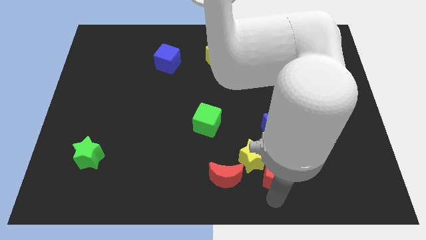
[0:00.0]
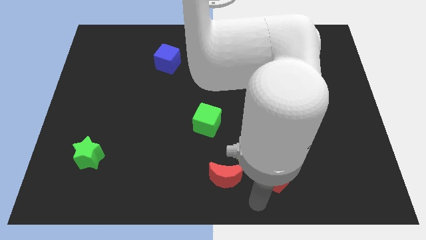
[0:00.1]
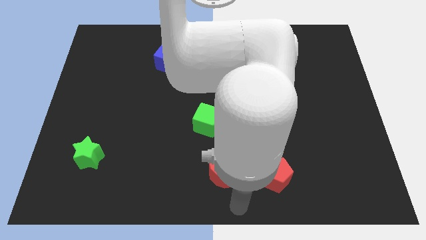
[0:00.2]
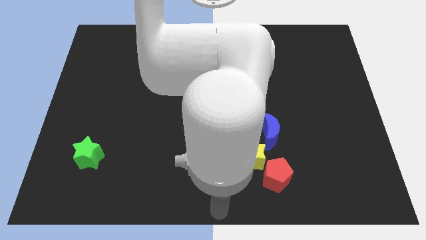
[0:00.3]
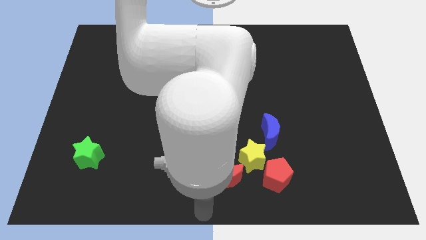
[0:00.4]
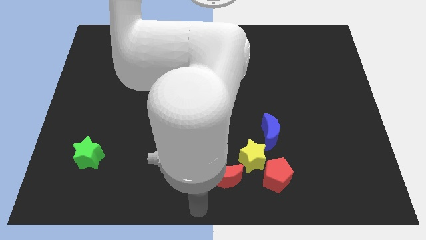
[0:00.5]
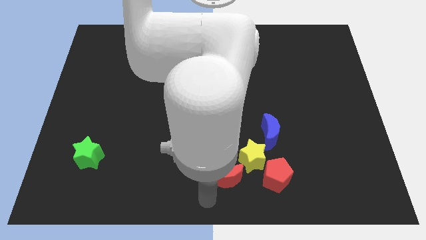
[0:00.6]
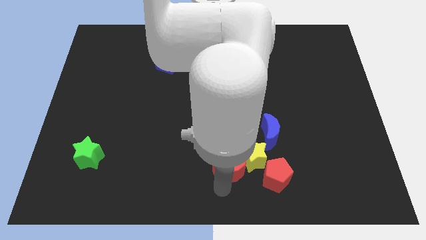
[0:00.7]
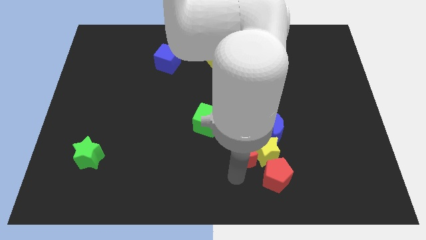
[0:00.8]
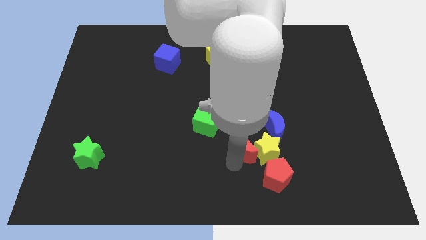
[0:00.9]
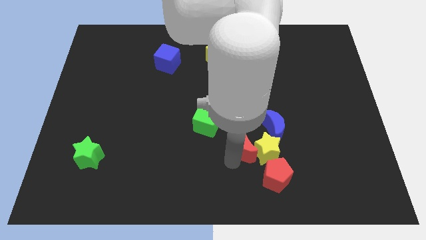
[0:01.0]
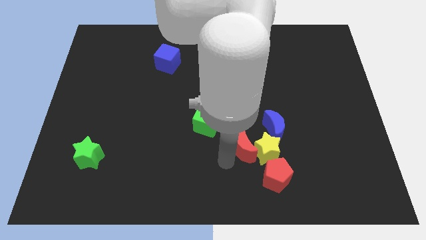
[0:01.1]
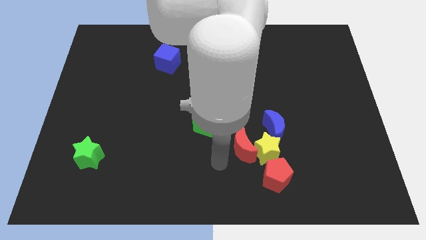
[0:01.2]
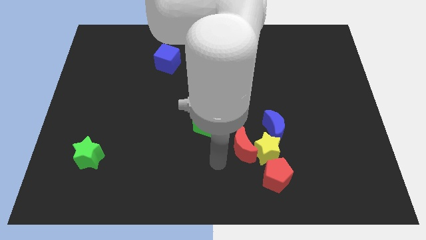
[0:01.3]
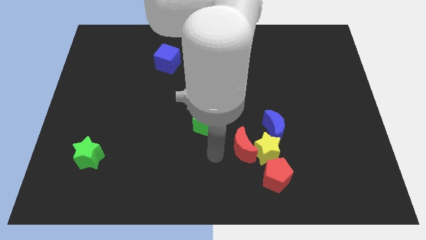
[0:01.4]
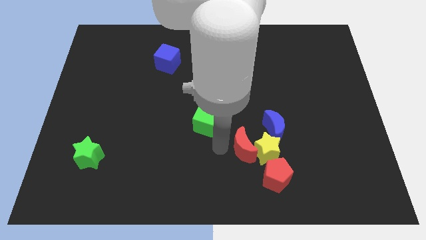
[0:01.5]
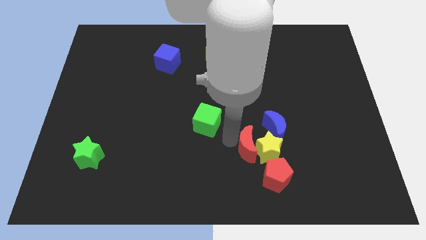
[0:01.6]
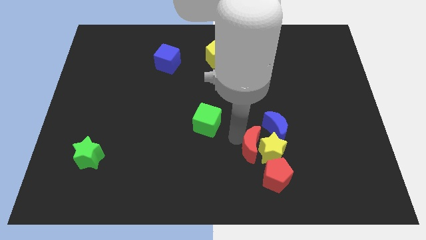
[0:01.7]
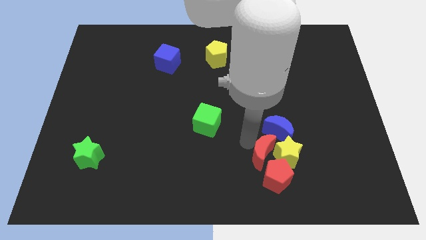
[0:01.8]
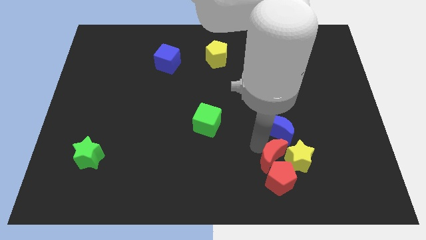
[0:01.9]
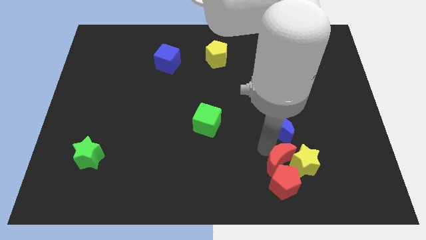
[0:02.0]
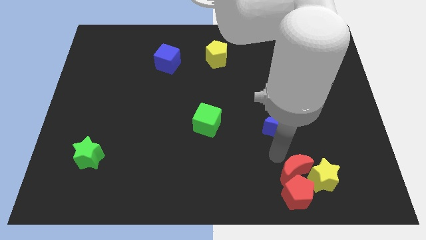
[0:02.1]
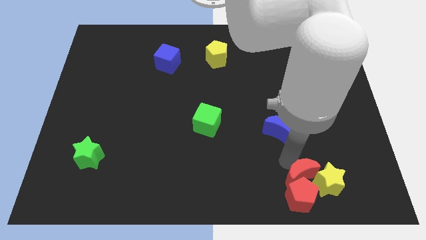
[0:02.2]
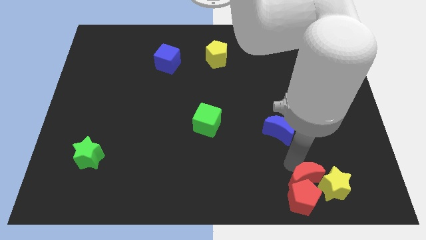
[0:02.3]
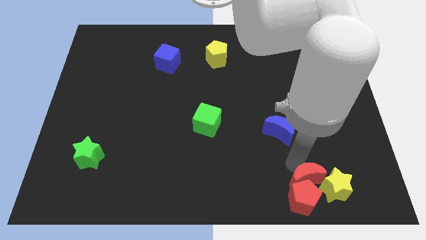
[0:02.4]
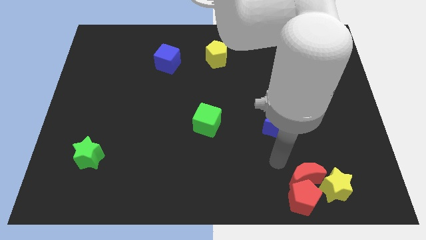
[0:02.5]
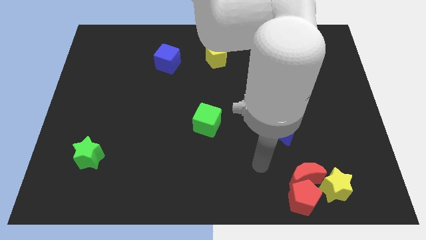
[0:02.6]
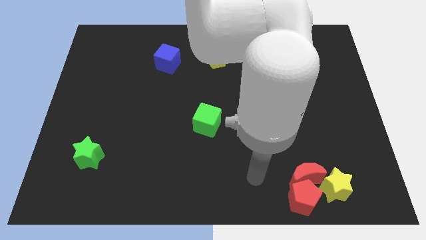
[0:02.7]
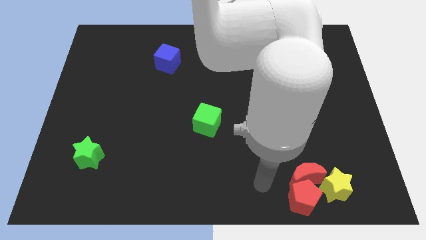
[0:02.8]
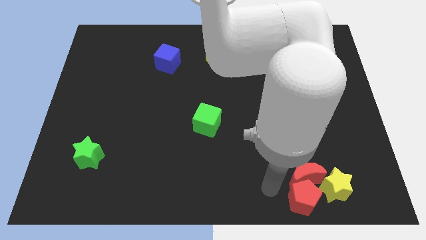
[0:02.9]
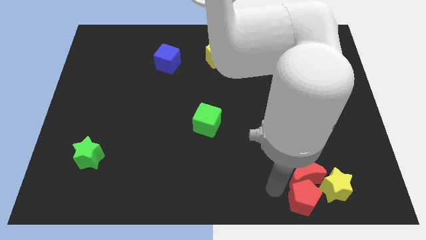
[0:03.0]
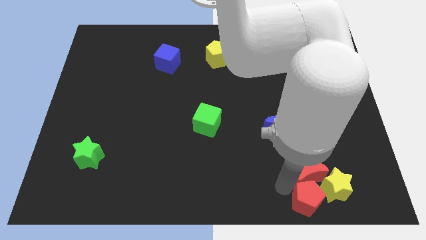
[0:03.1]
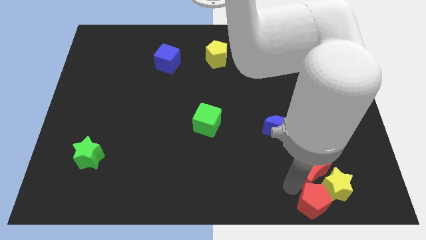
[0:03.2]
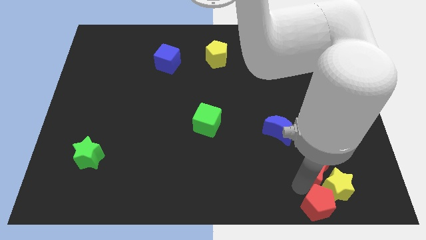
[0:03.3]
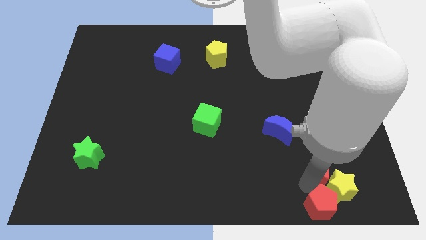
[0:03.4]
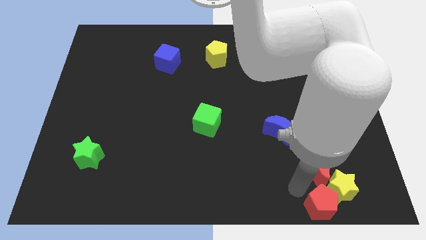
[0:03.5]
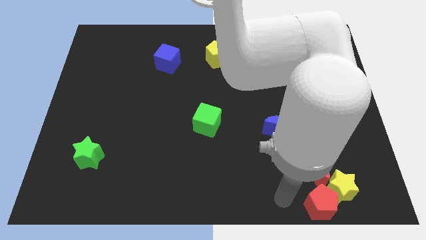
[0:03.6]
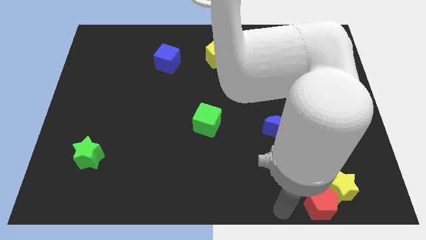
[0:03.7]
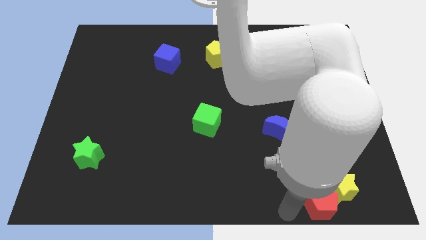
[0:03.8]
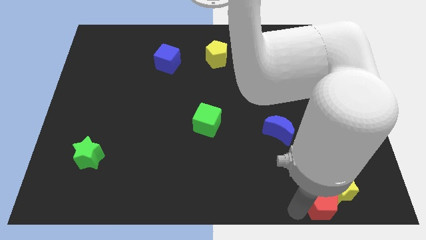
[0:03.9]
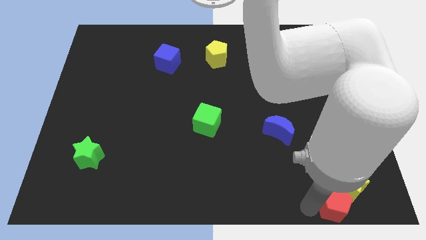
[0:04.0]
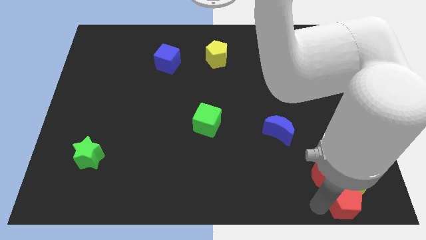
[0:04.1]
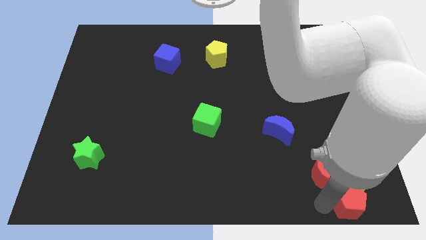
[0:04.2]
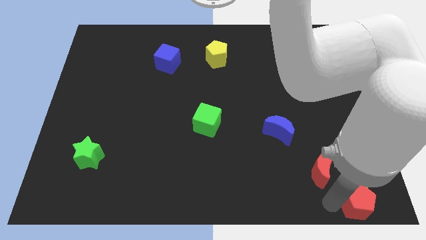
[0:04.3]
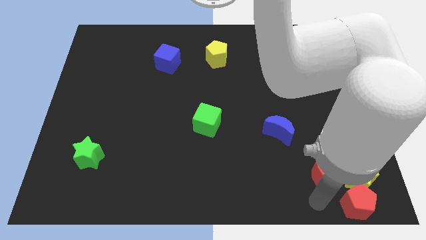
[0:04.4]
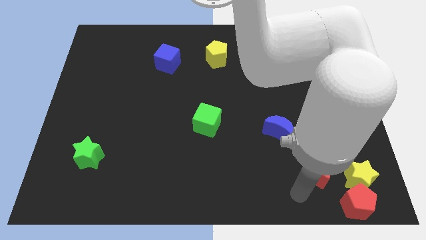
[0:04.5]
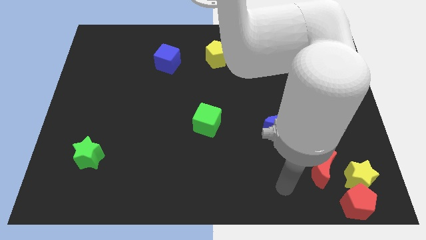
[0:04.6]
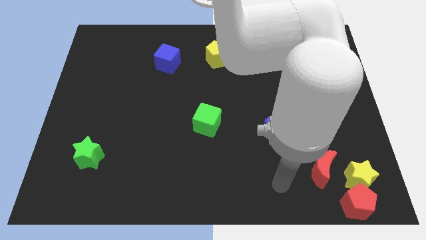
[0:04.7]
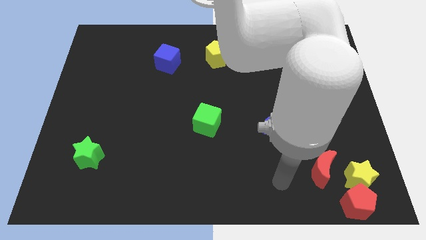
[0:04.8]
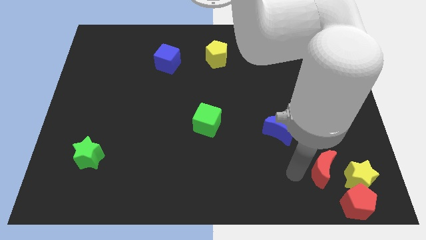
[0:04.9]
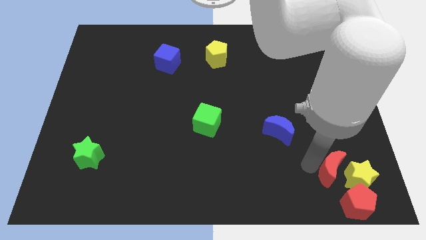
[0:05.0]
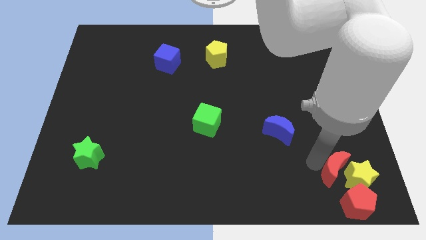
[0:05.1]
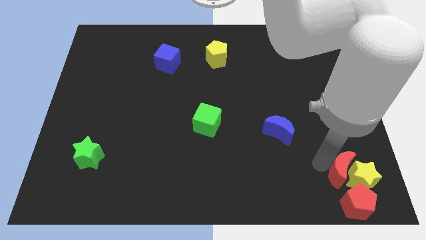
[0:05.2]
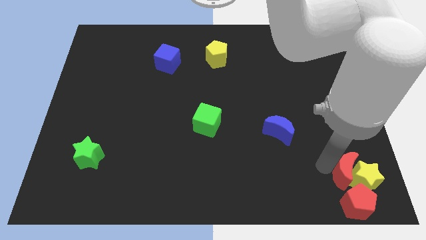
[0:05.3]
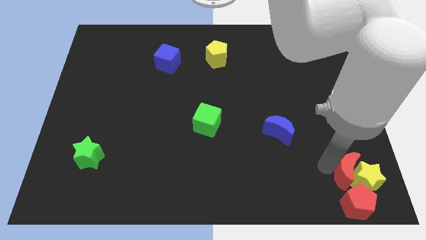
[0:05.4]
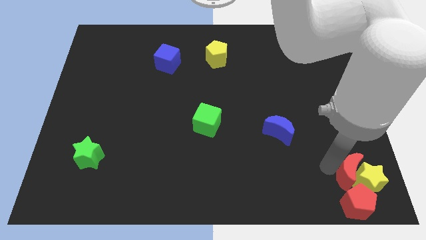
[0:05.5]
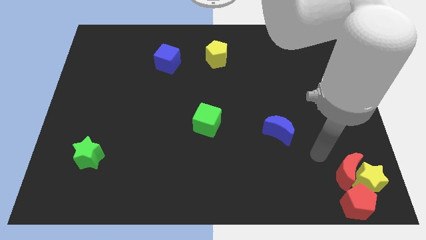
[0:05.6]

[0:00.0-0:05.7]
push the red blocks and yellow star to bottom right

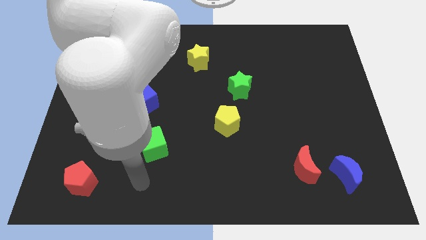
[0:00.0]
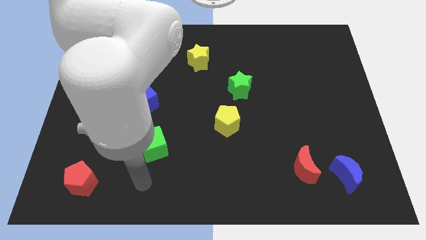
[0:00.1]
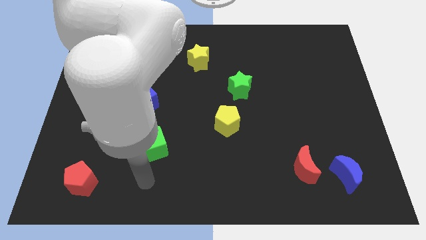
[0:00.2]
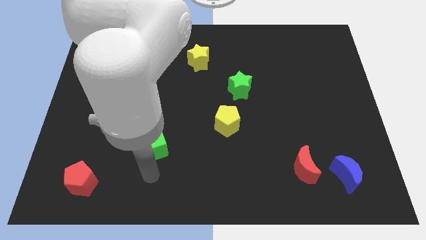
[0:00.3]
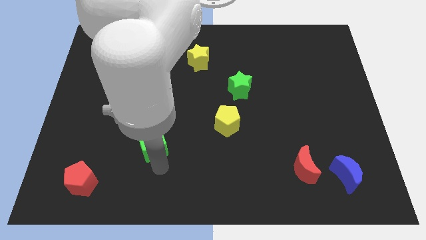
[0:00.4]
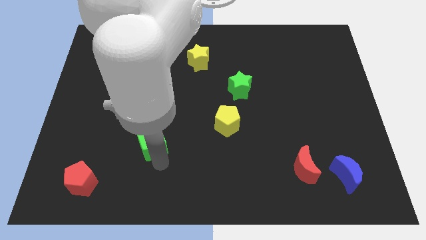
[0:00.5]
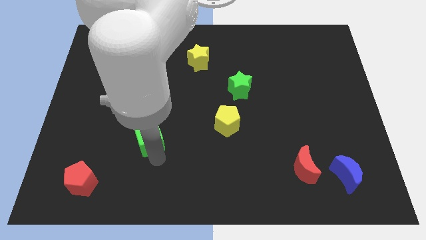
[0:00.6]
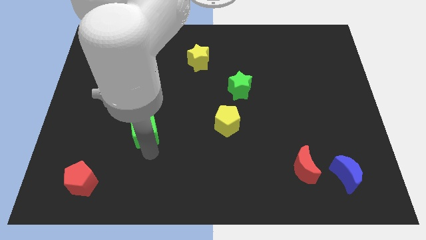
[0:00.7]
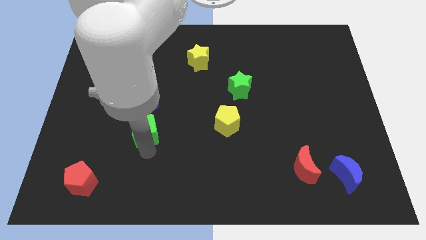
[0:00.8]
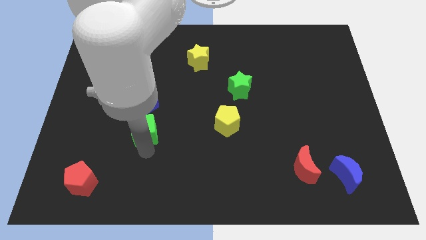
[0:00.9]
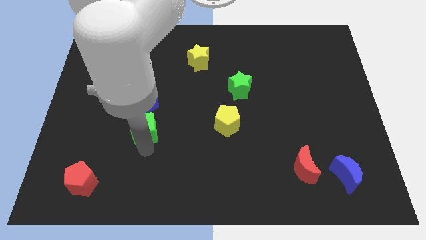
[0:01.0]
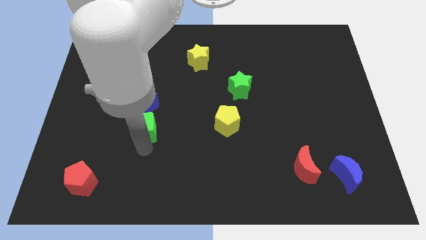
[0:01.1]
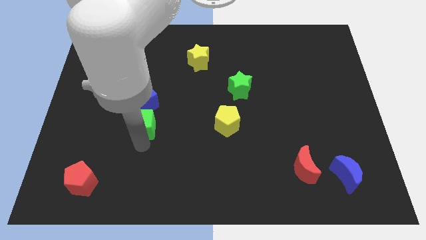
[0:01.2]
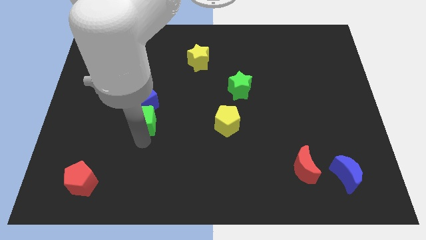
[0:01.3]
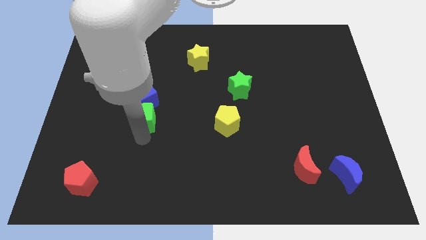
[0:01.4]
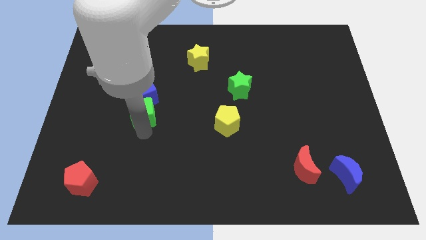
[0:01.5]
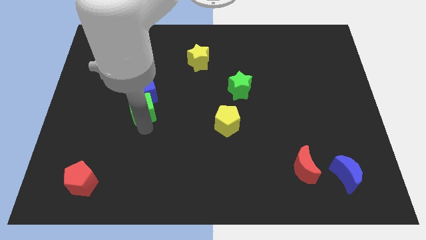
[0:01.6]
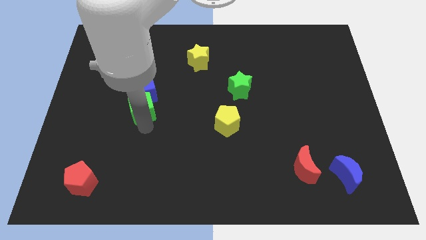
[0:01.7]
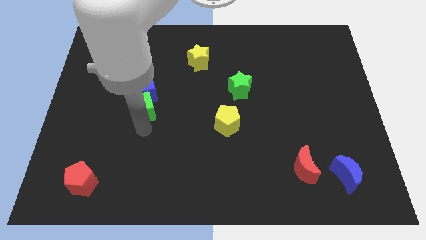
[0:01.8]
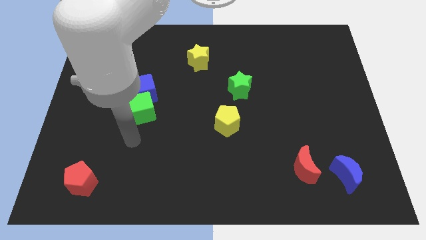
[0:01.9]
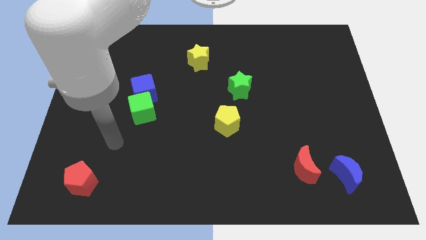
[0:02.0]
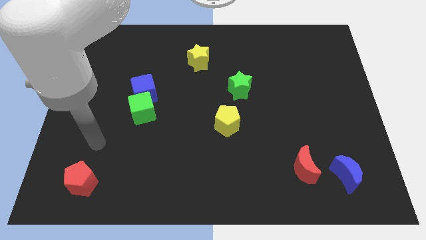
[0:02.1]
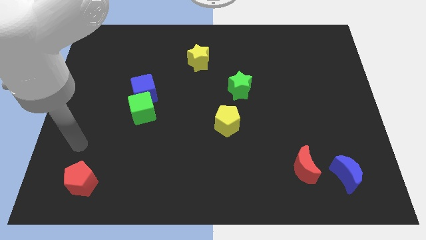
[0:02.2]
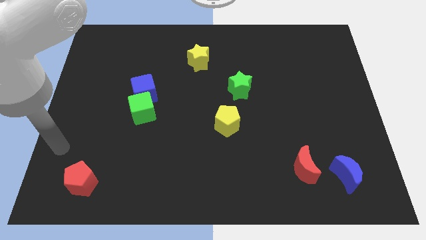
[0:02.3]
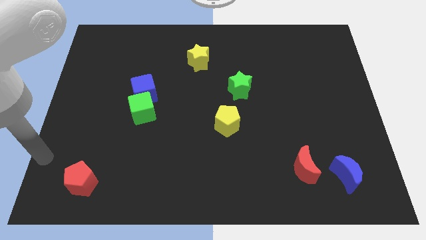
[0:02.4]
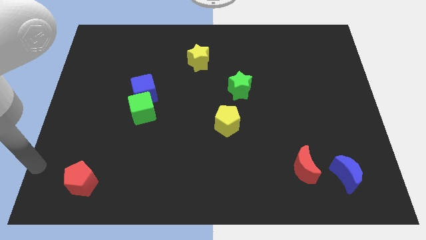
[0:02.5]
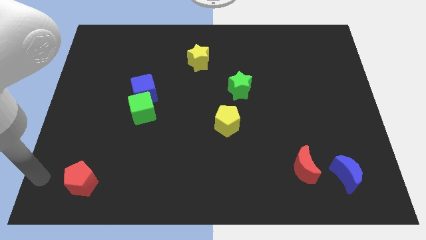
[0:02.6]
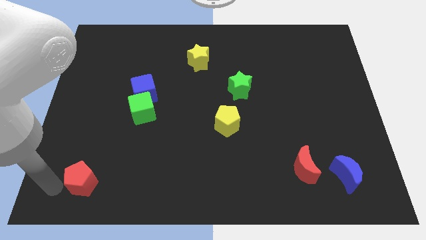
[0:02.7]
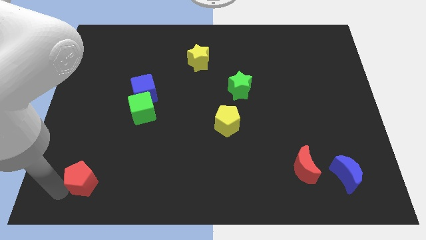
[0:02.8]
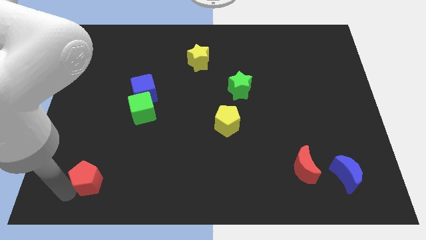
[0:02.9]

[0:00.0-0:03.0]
push the green cube into the blue cube

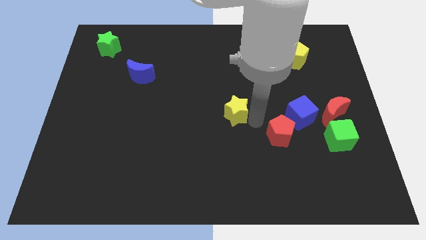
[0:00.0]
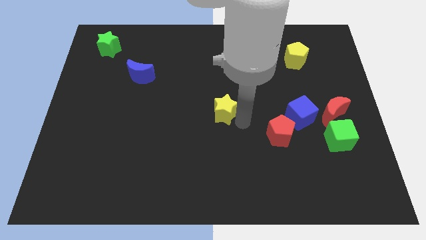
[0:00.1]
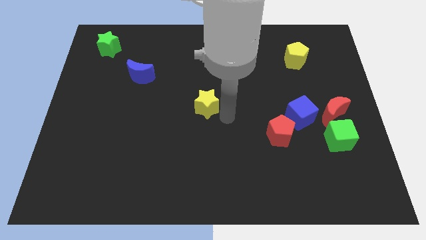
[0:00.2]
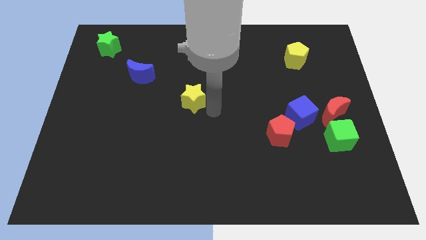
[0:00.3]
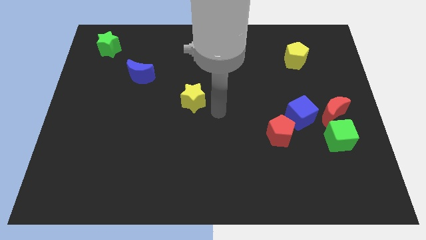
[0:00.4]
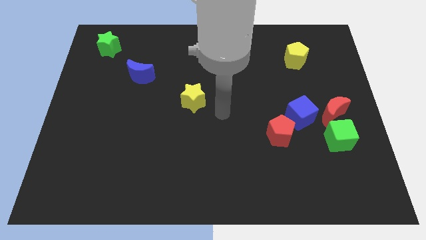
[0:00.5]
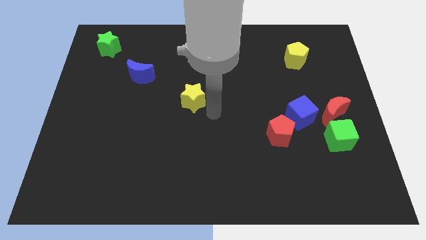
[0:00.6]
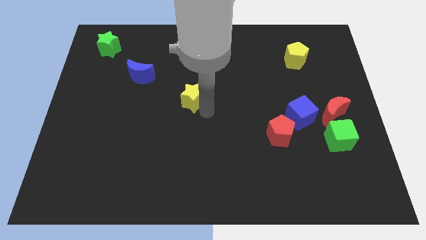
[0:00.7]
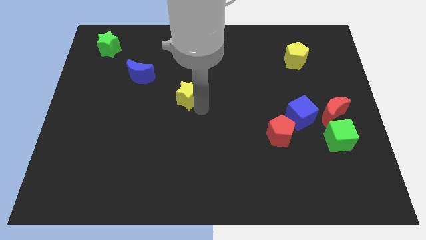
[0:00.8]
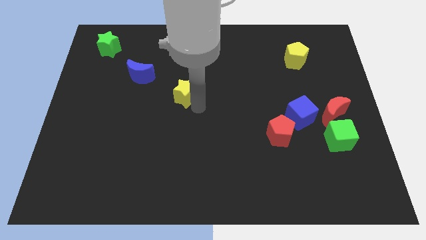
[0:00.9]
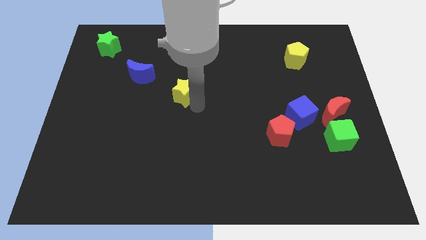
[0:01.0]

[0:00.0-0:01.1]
push yellow star diagonally to blue moon
